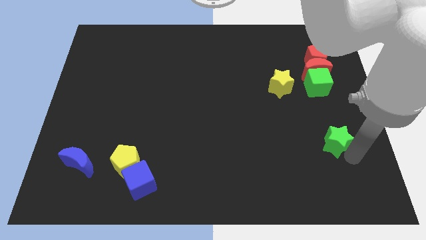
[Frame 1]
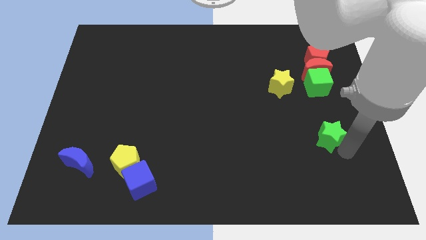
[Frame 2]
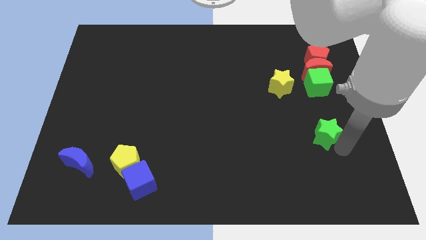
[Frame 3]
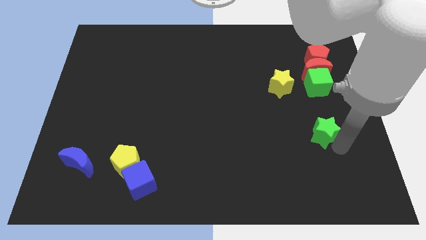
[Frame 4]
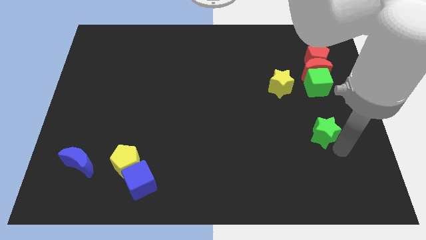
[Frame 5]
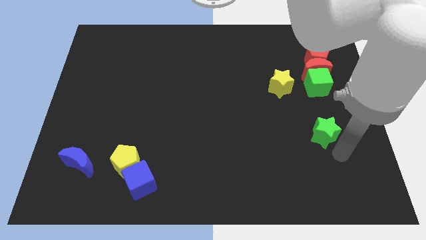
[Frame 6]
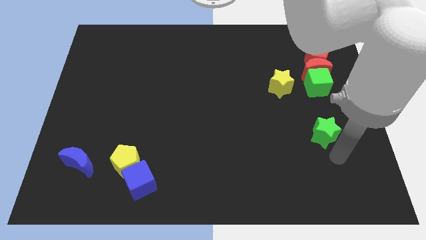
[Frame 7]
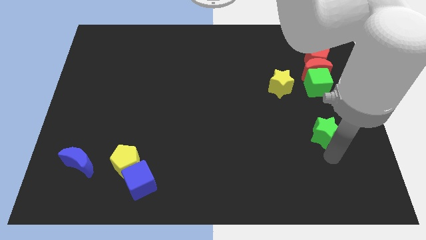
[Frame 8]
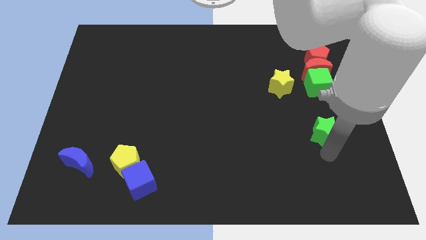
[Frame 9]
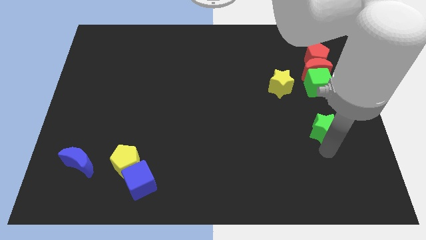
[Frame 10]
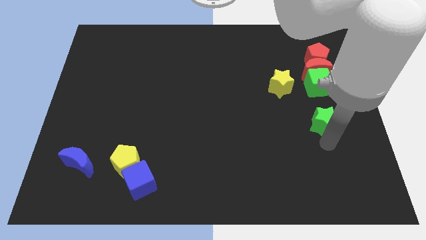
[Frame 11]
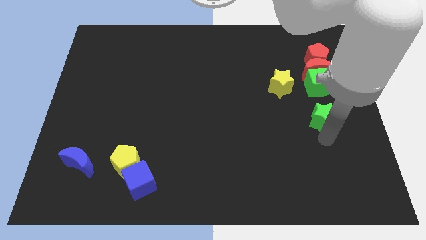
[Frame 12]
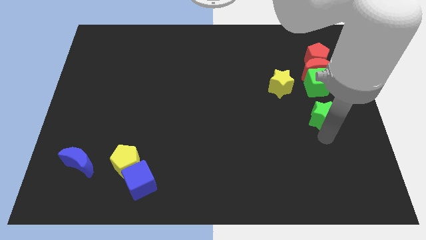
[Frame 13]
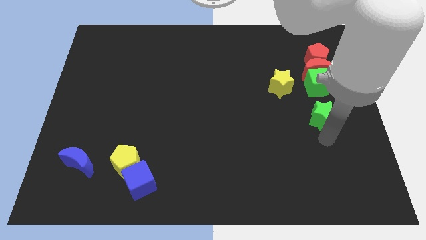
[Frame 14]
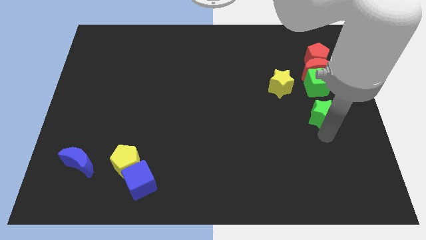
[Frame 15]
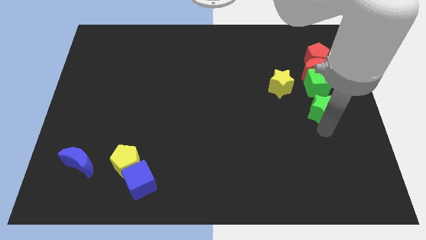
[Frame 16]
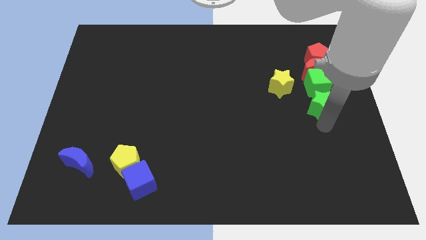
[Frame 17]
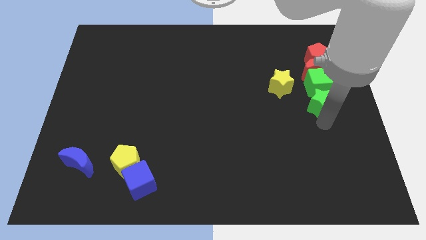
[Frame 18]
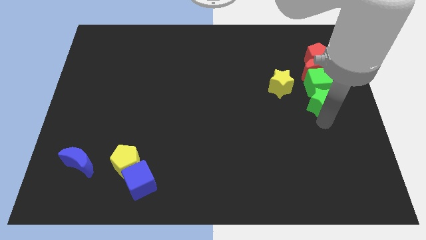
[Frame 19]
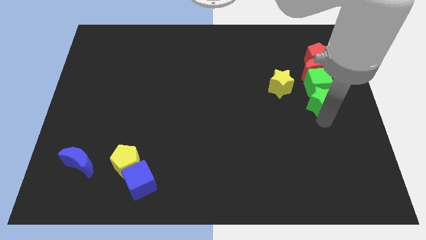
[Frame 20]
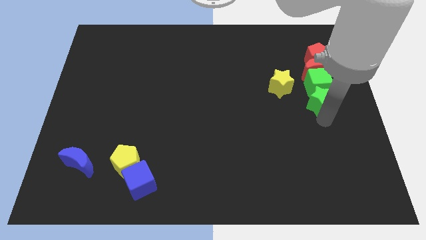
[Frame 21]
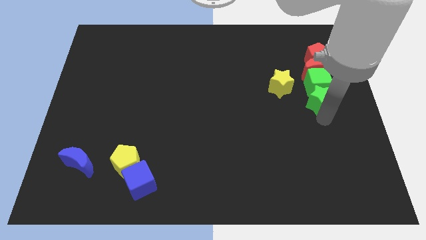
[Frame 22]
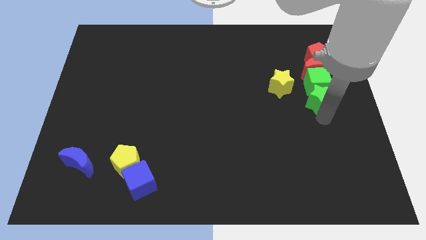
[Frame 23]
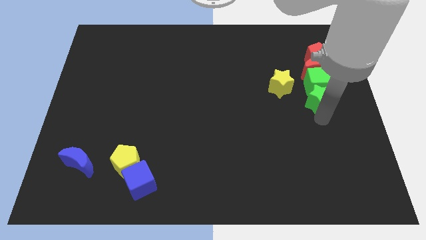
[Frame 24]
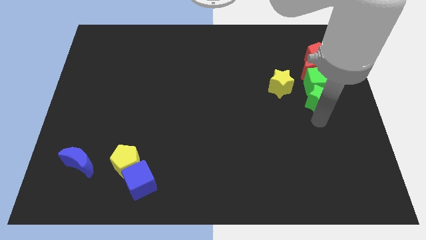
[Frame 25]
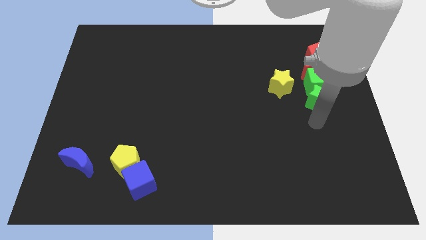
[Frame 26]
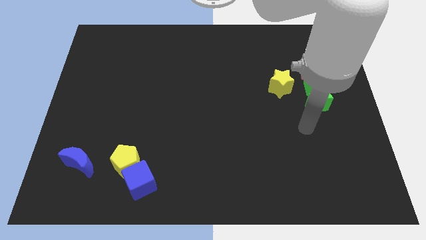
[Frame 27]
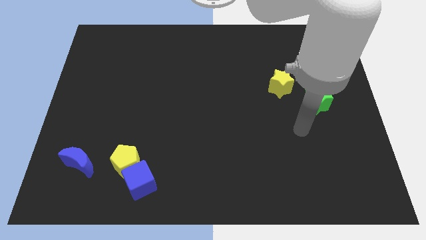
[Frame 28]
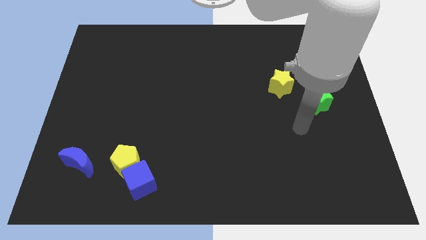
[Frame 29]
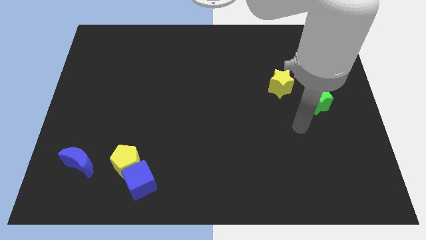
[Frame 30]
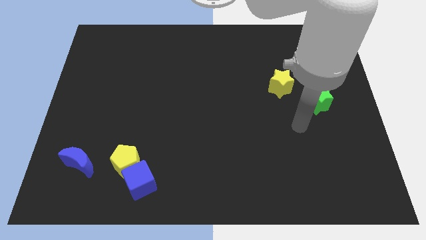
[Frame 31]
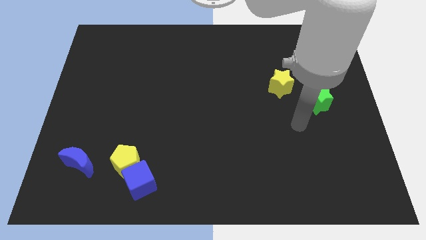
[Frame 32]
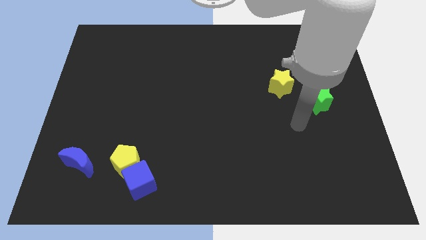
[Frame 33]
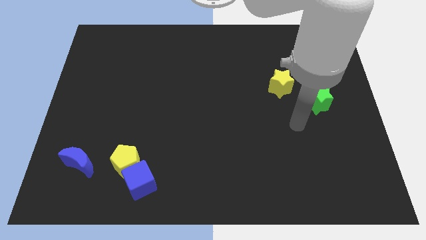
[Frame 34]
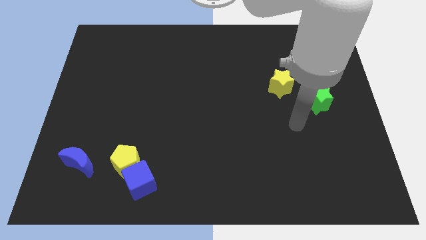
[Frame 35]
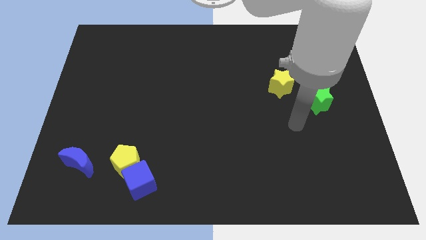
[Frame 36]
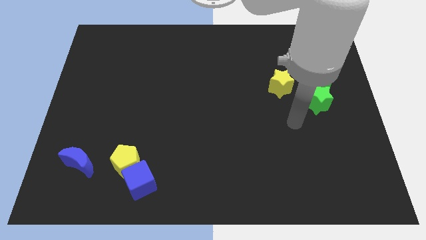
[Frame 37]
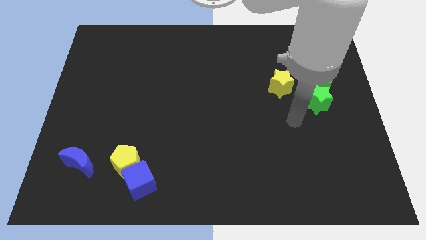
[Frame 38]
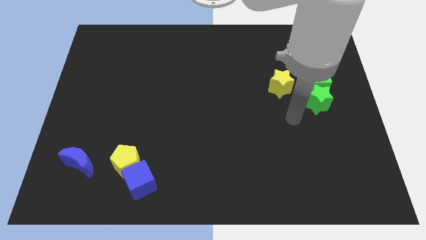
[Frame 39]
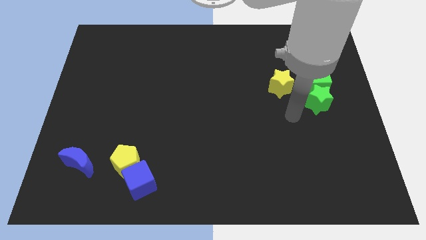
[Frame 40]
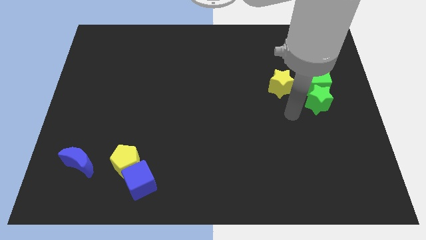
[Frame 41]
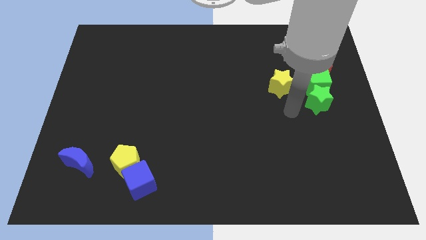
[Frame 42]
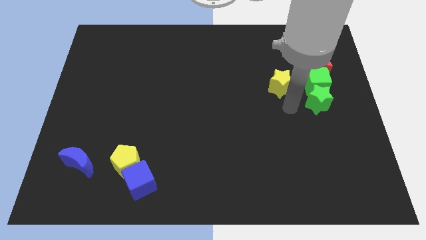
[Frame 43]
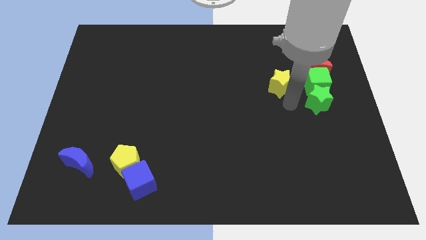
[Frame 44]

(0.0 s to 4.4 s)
place your arm below yellow star

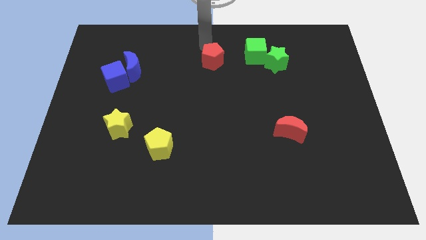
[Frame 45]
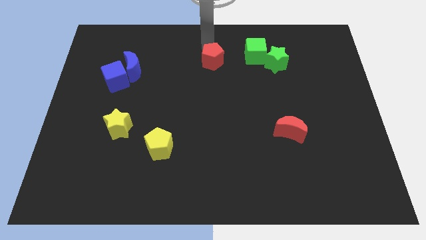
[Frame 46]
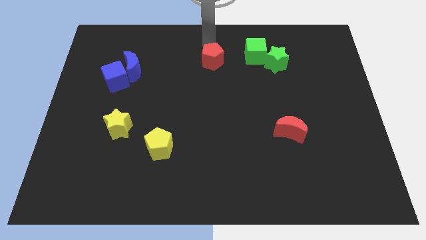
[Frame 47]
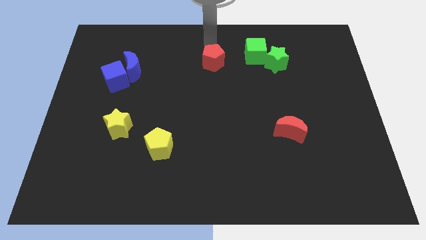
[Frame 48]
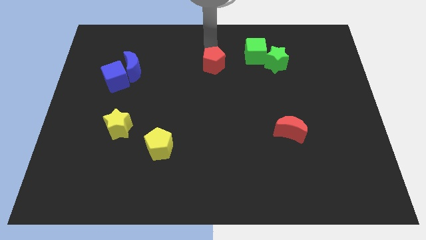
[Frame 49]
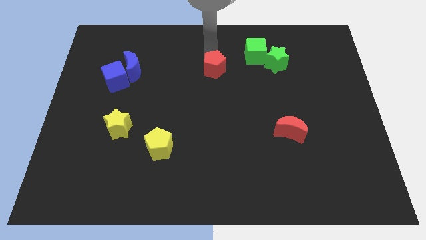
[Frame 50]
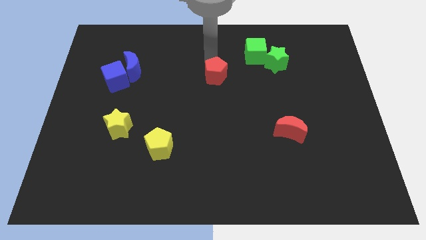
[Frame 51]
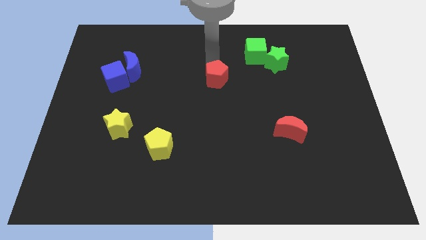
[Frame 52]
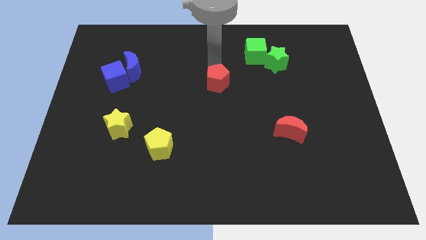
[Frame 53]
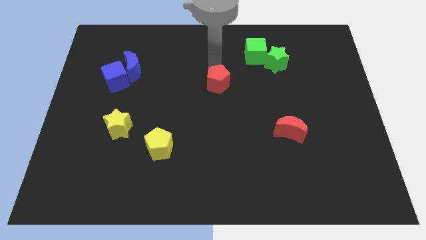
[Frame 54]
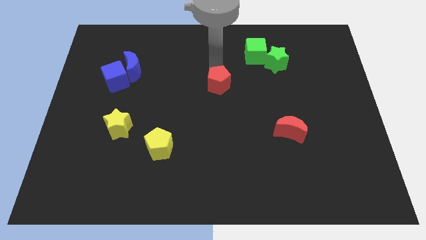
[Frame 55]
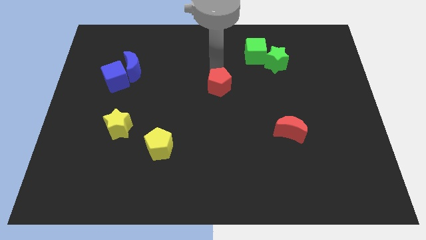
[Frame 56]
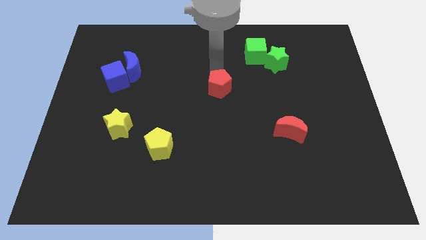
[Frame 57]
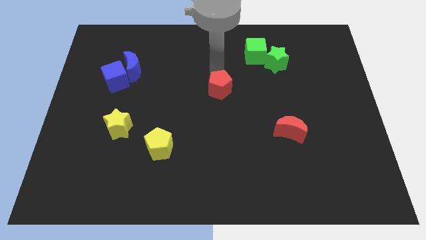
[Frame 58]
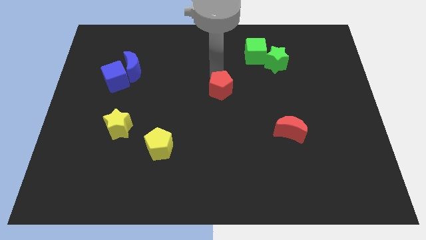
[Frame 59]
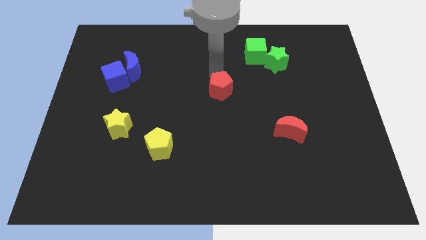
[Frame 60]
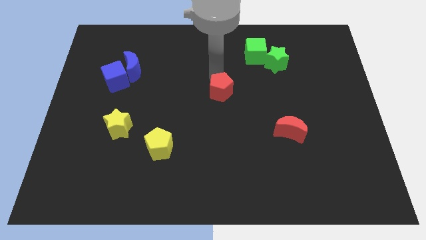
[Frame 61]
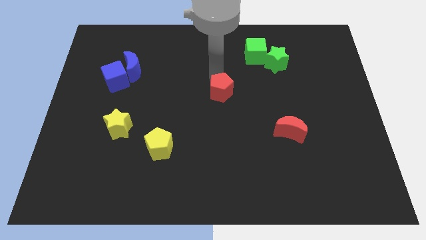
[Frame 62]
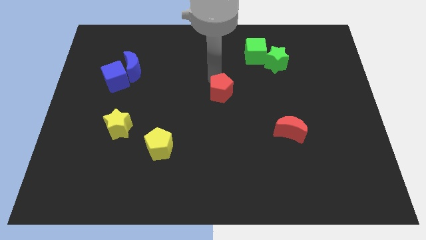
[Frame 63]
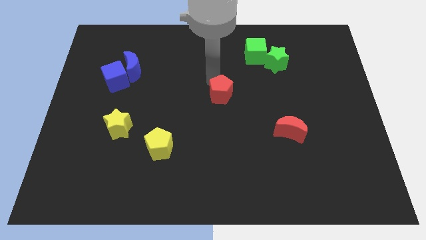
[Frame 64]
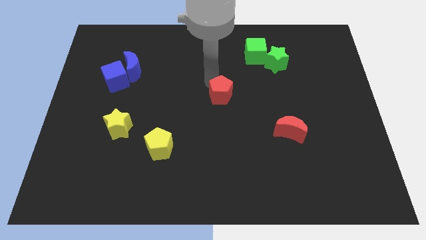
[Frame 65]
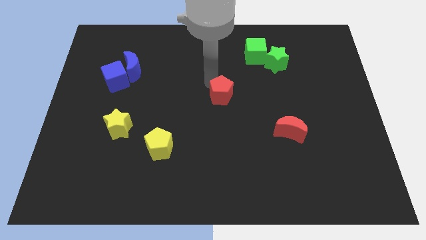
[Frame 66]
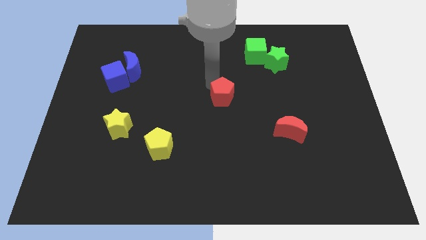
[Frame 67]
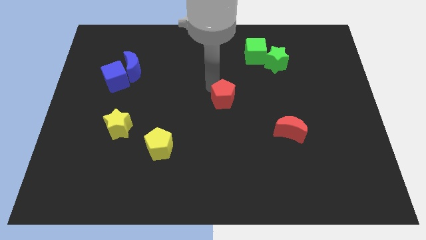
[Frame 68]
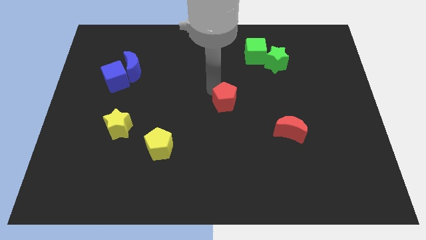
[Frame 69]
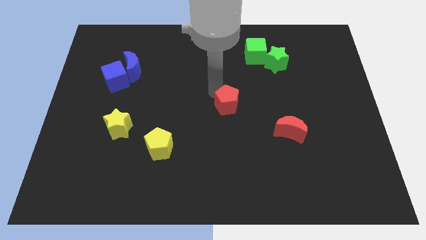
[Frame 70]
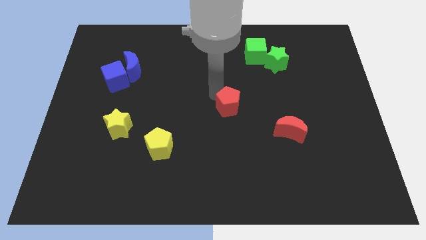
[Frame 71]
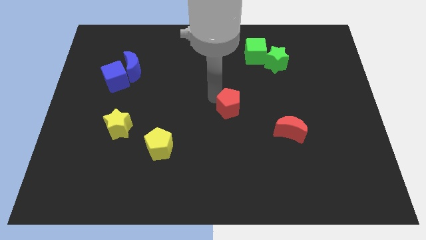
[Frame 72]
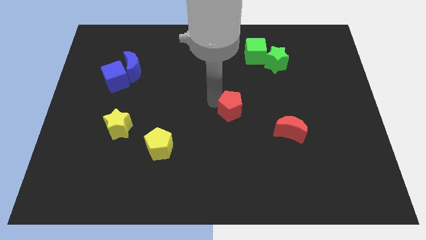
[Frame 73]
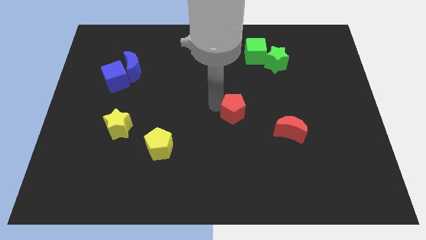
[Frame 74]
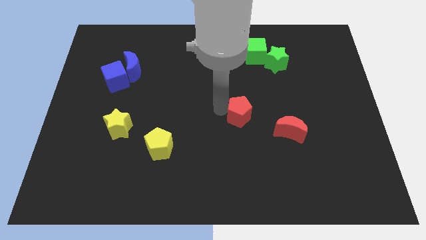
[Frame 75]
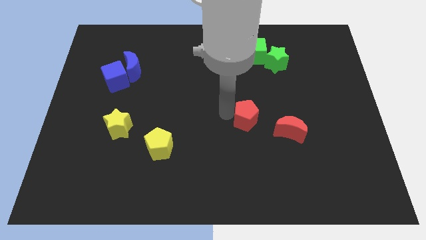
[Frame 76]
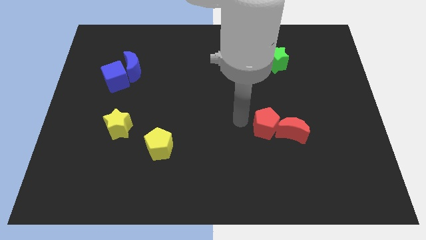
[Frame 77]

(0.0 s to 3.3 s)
move the red pentagon into the red moon

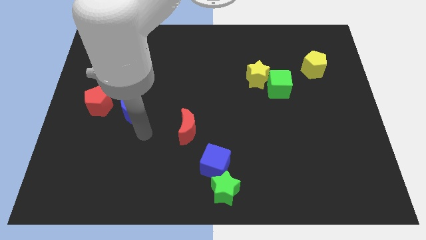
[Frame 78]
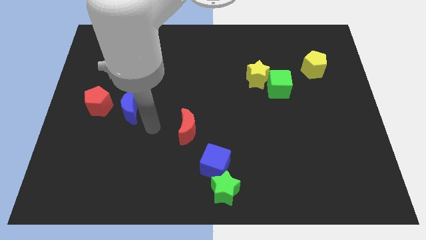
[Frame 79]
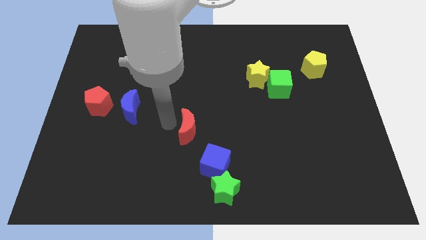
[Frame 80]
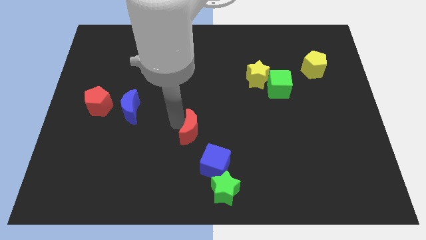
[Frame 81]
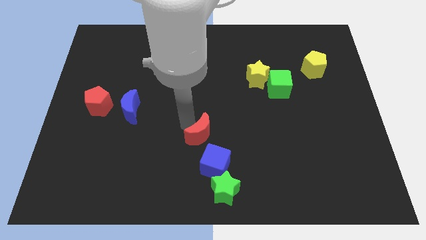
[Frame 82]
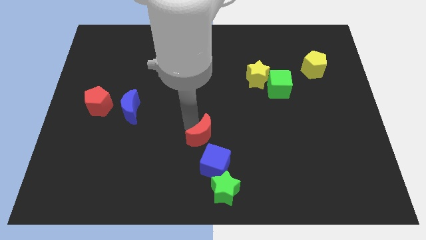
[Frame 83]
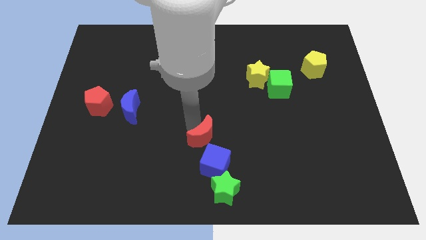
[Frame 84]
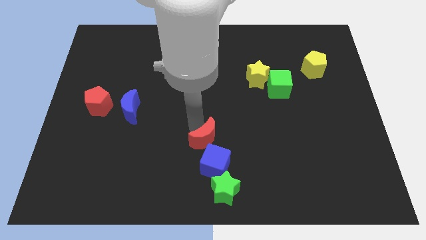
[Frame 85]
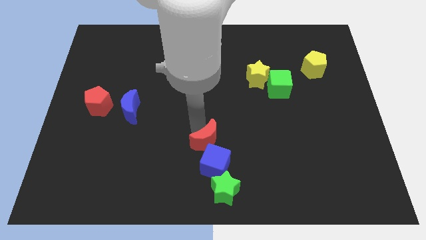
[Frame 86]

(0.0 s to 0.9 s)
push the red crescent above the blue cube

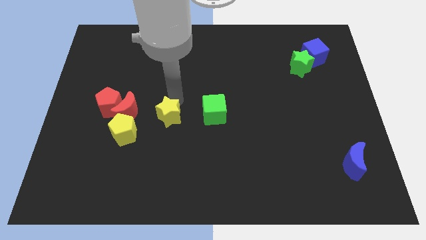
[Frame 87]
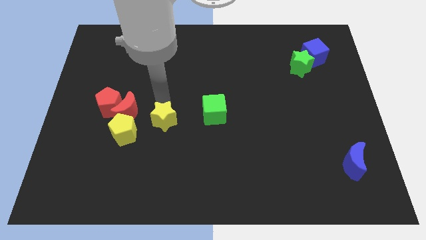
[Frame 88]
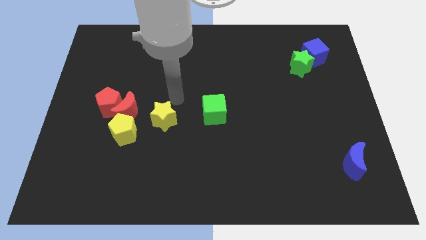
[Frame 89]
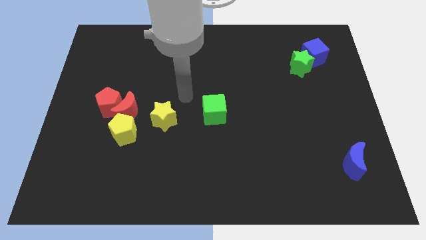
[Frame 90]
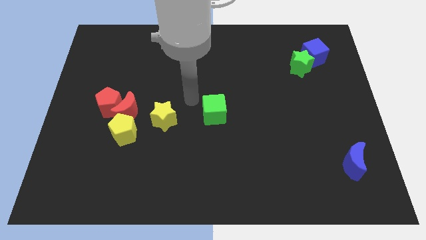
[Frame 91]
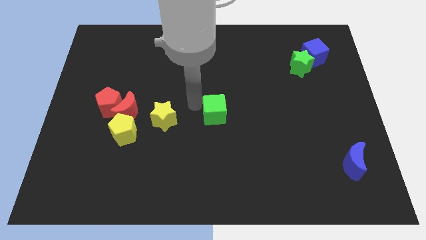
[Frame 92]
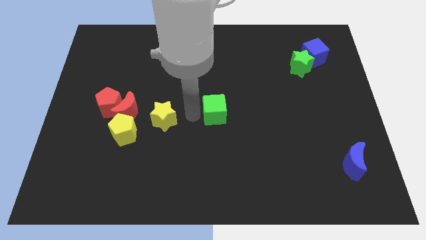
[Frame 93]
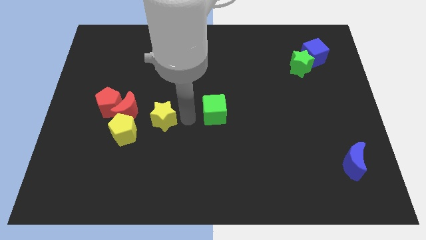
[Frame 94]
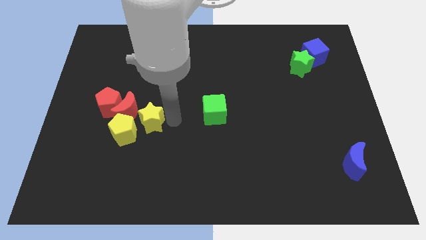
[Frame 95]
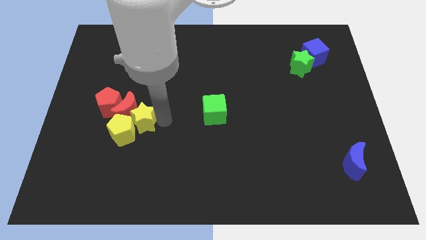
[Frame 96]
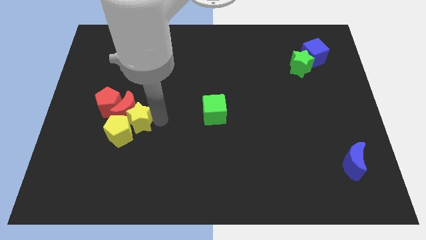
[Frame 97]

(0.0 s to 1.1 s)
move the yellow star into the yellow pentagon
